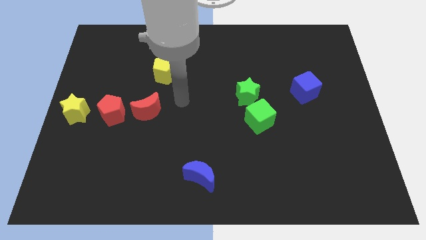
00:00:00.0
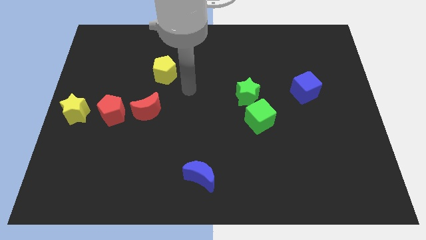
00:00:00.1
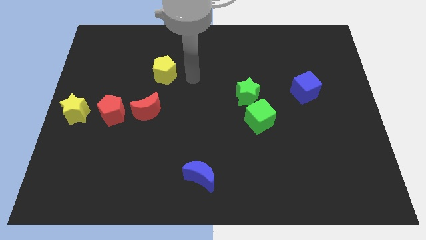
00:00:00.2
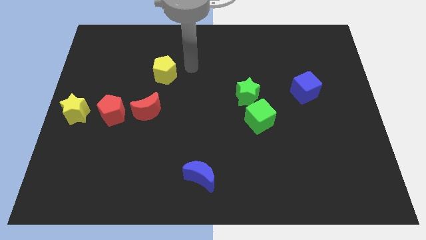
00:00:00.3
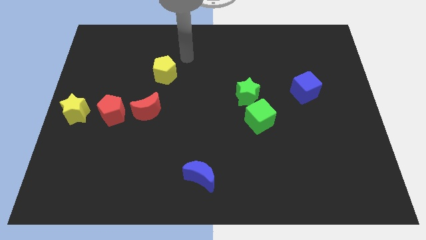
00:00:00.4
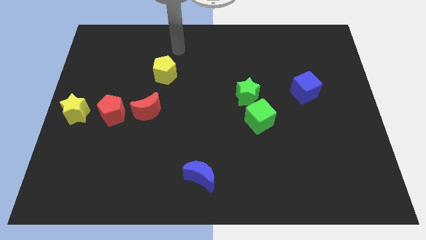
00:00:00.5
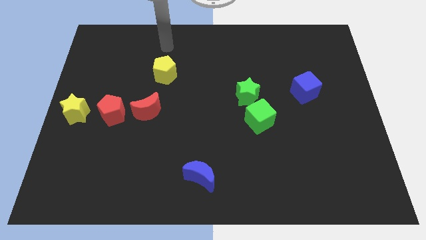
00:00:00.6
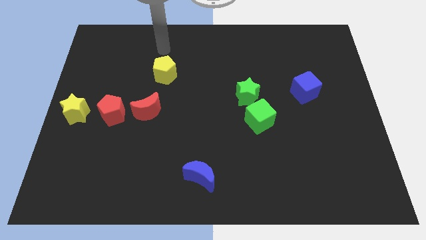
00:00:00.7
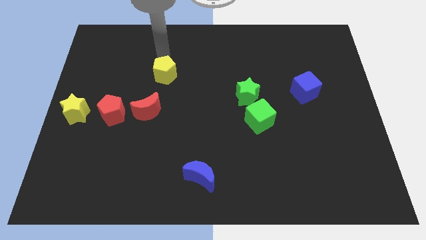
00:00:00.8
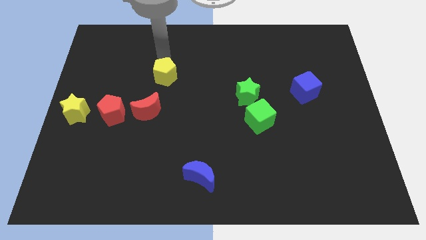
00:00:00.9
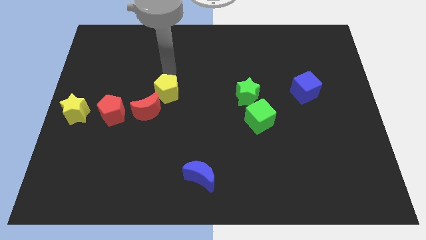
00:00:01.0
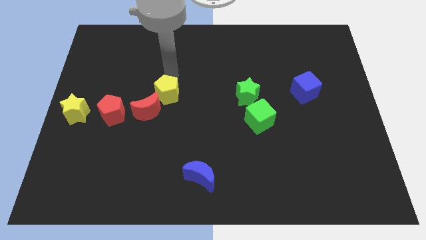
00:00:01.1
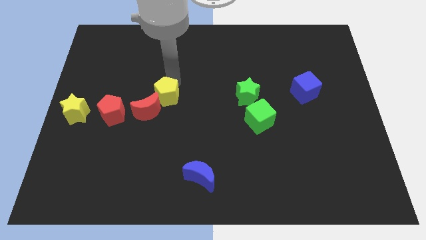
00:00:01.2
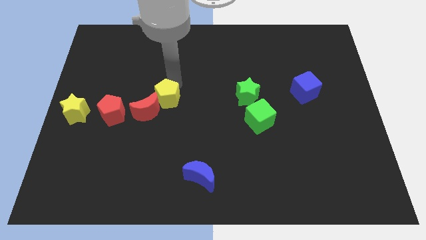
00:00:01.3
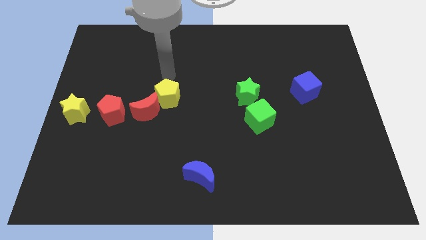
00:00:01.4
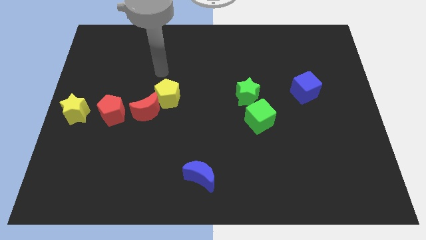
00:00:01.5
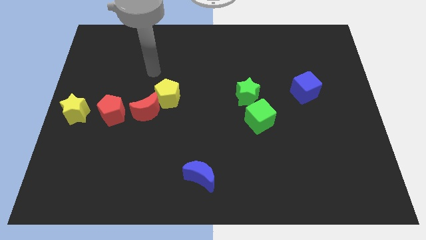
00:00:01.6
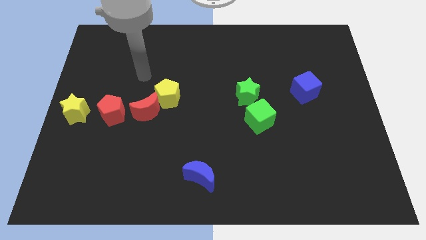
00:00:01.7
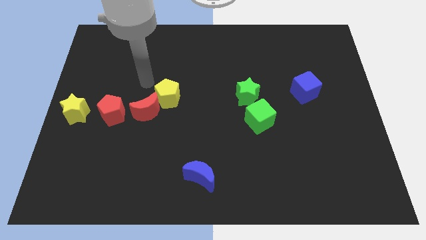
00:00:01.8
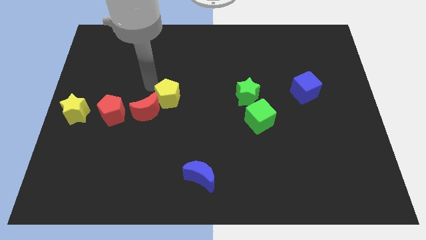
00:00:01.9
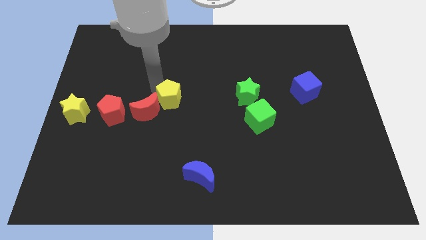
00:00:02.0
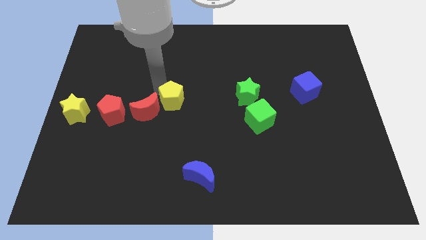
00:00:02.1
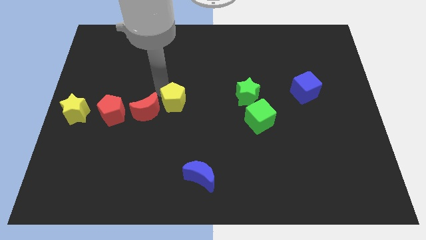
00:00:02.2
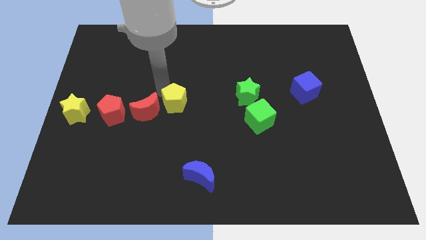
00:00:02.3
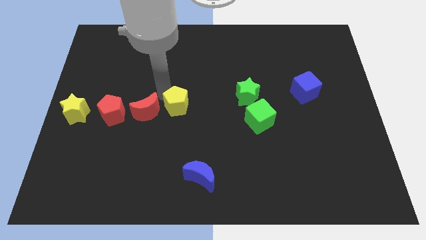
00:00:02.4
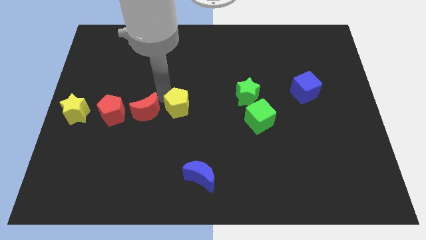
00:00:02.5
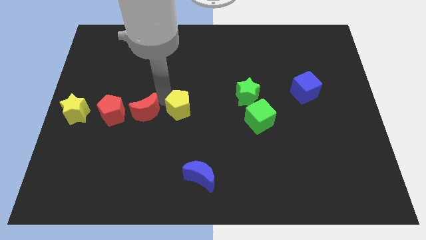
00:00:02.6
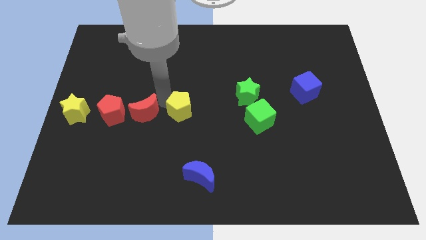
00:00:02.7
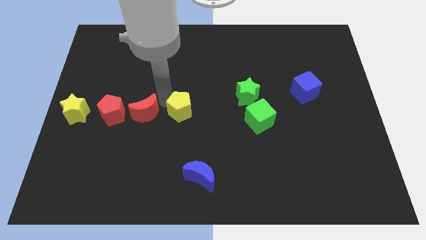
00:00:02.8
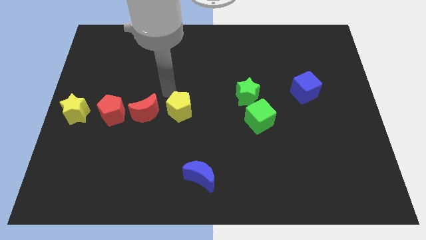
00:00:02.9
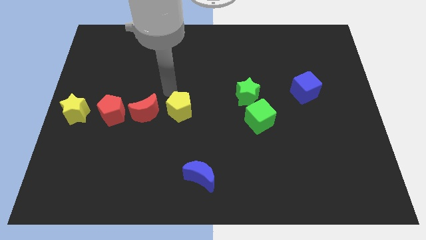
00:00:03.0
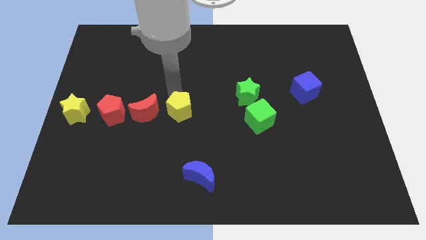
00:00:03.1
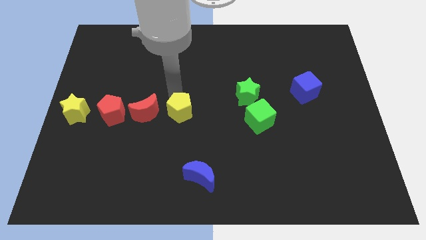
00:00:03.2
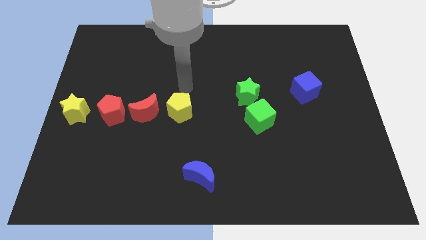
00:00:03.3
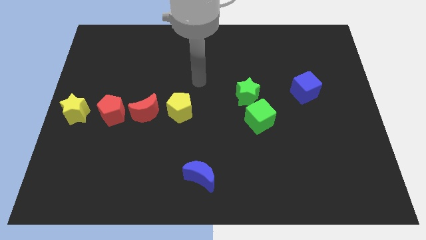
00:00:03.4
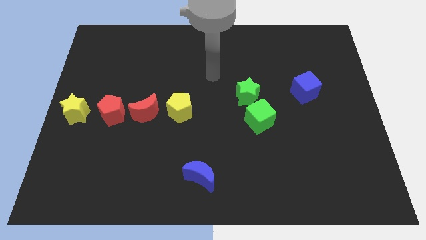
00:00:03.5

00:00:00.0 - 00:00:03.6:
place the yelllow pentagon at the right side of the red crescent

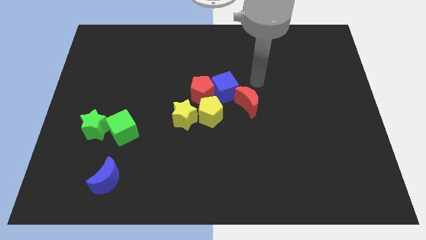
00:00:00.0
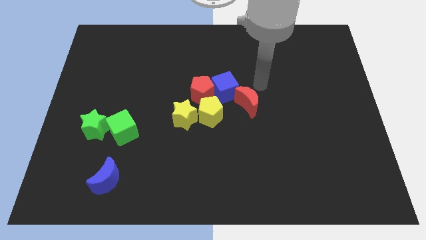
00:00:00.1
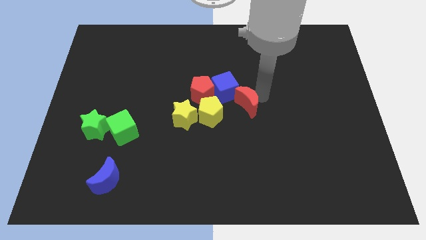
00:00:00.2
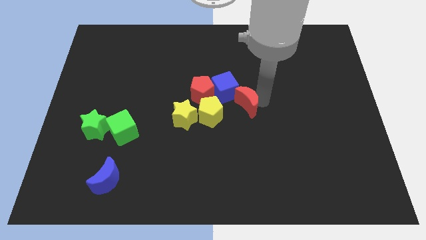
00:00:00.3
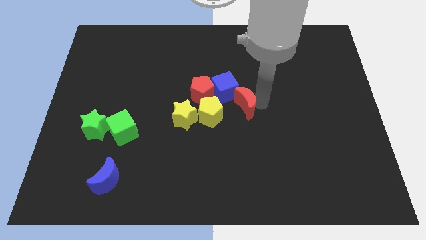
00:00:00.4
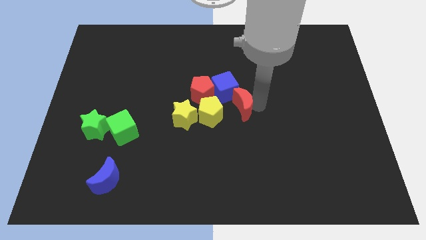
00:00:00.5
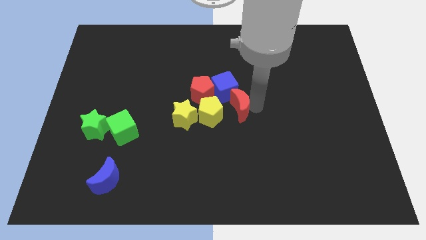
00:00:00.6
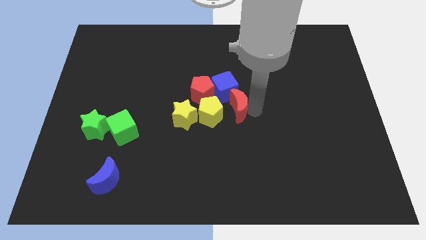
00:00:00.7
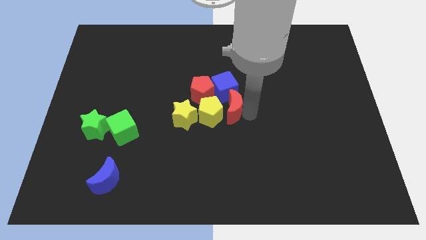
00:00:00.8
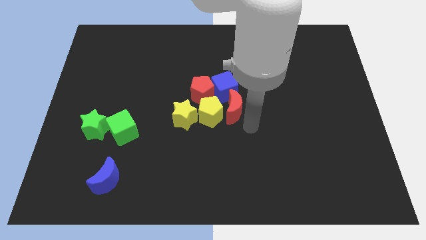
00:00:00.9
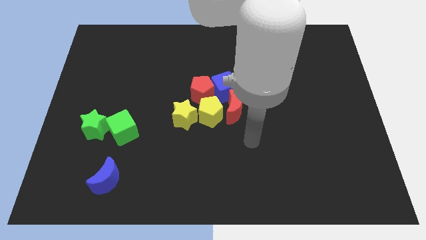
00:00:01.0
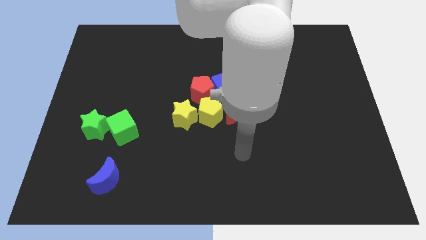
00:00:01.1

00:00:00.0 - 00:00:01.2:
place the red crescent below the blue cube

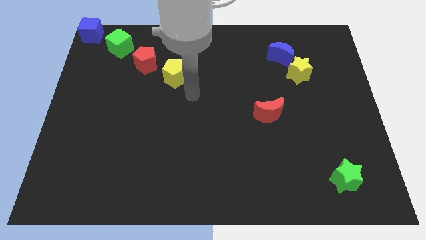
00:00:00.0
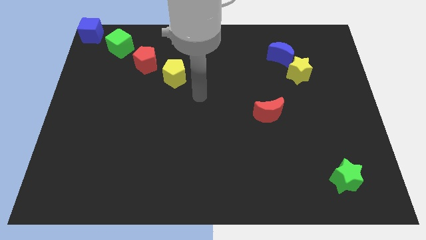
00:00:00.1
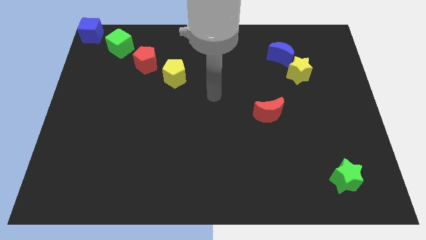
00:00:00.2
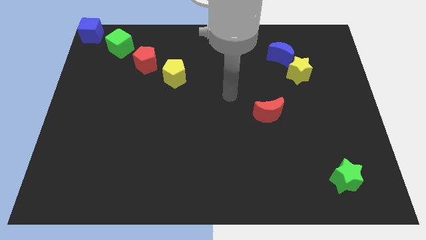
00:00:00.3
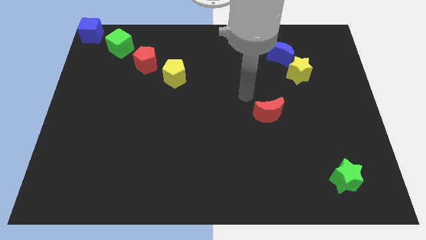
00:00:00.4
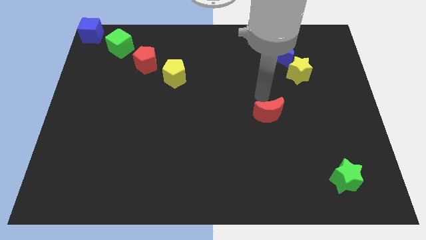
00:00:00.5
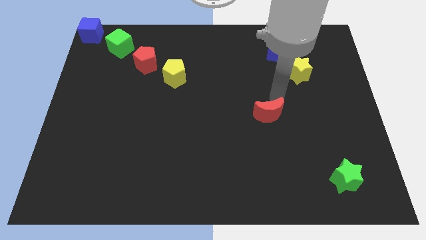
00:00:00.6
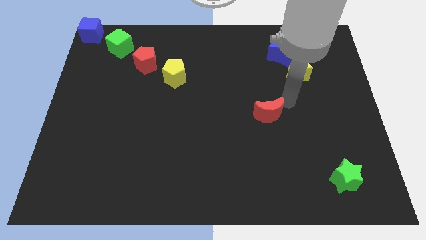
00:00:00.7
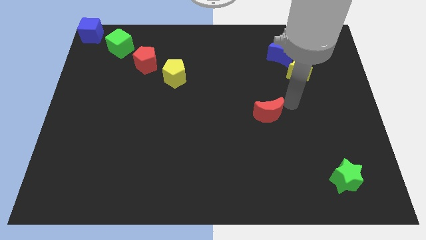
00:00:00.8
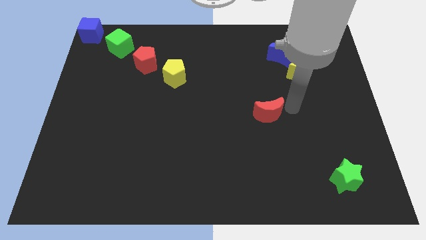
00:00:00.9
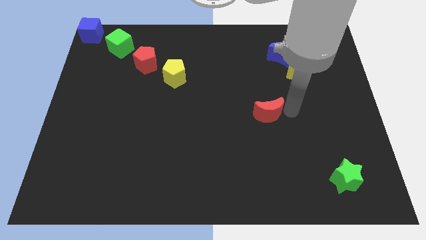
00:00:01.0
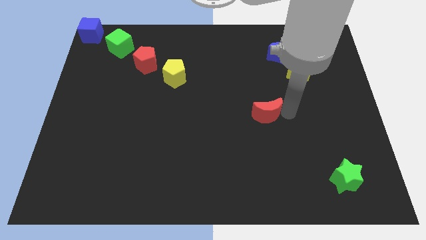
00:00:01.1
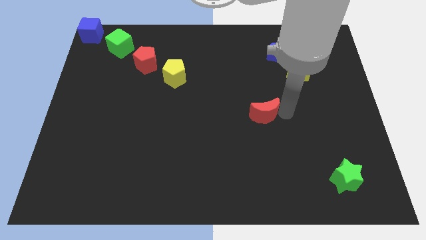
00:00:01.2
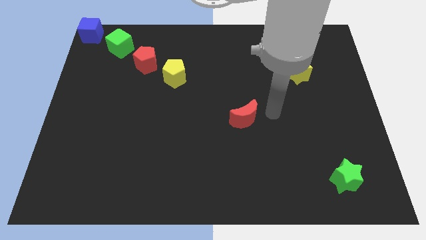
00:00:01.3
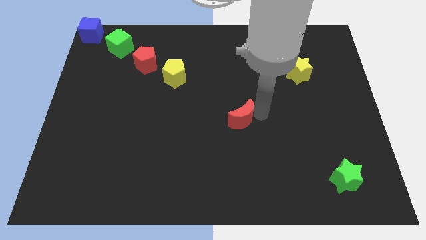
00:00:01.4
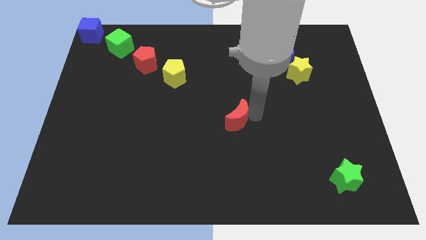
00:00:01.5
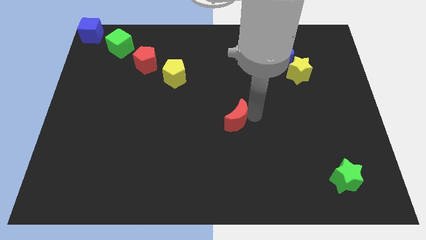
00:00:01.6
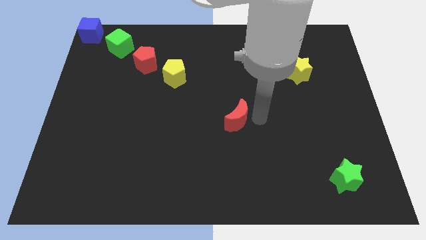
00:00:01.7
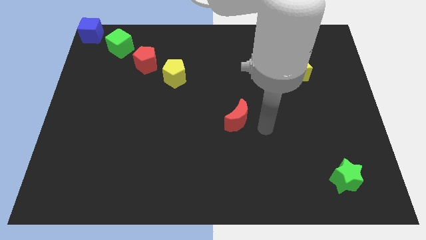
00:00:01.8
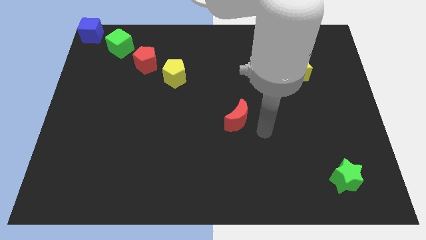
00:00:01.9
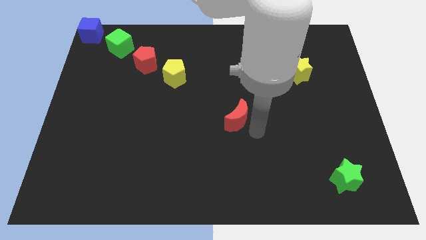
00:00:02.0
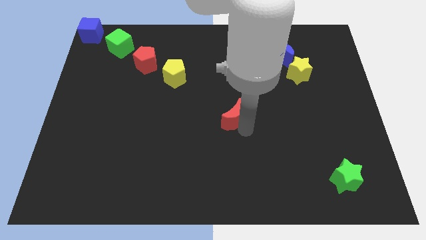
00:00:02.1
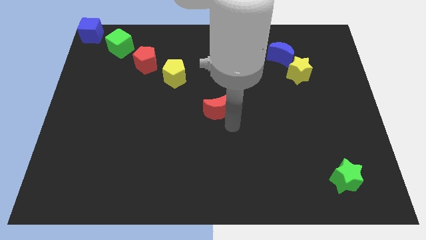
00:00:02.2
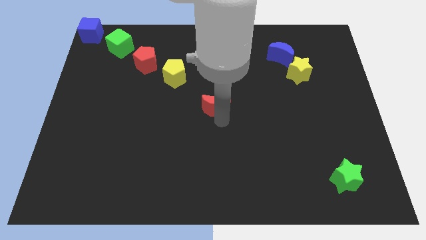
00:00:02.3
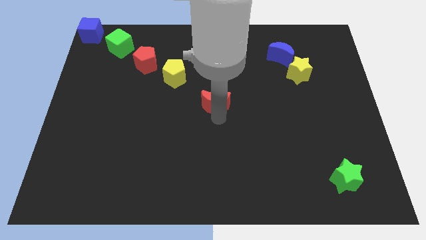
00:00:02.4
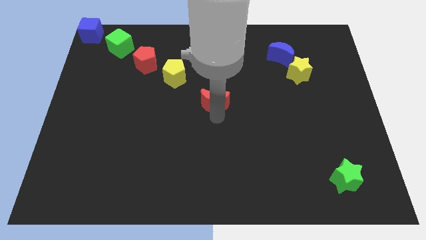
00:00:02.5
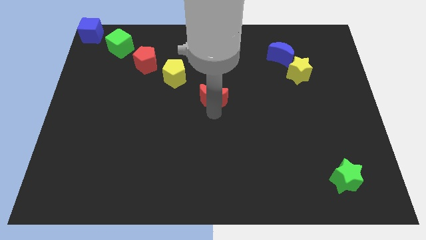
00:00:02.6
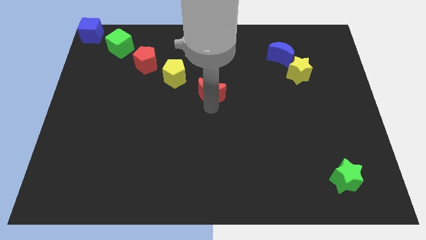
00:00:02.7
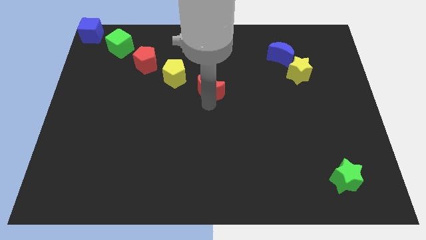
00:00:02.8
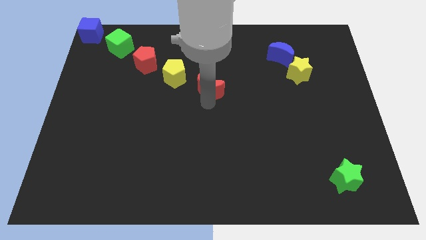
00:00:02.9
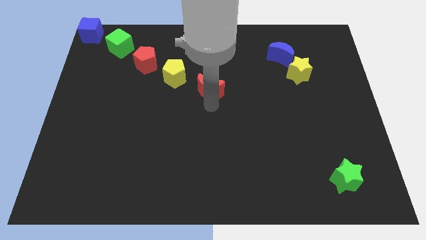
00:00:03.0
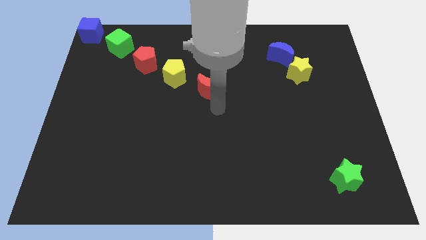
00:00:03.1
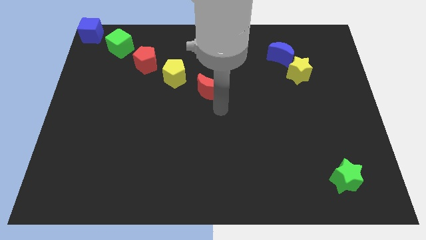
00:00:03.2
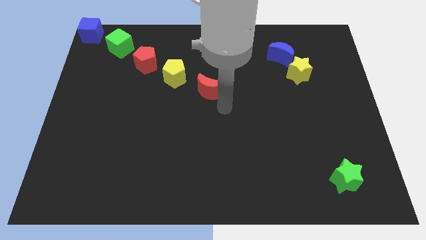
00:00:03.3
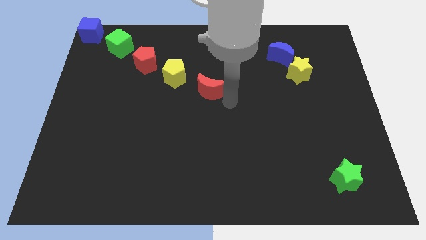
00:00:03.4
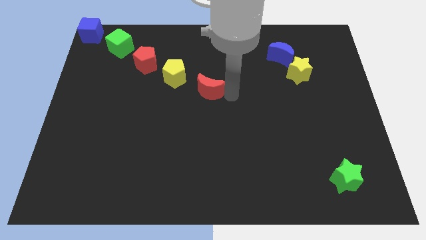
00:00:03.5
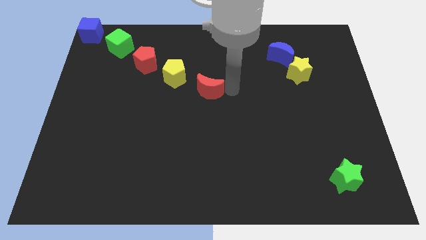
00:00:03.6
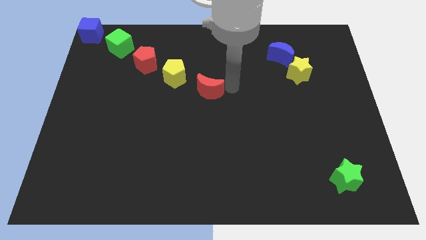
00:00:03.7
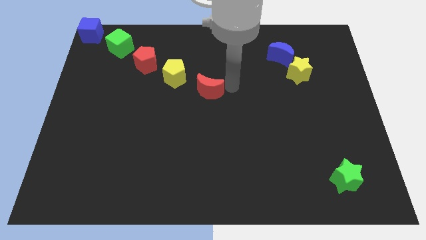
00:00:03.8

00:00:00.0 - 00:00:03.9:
move the red crescent to the center of the board

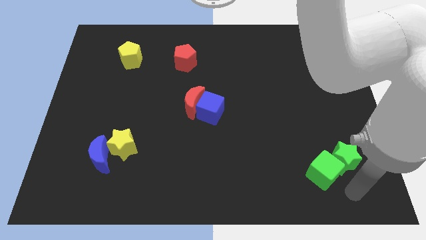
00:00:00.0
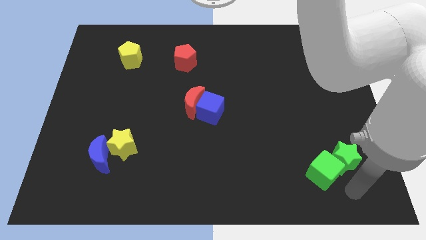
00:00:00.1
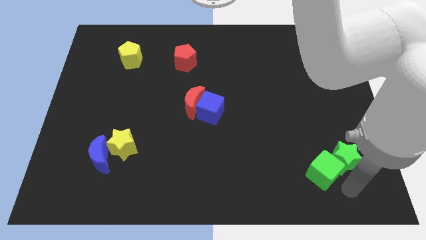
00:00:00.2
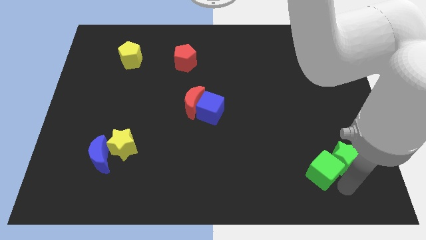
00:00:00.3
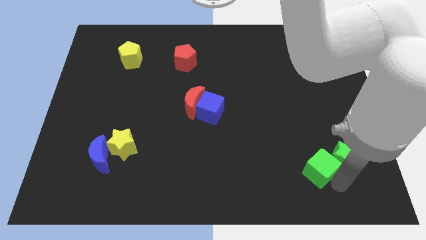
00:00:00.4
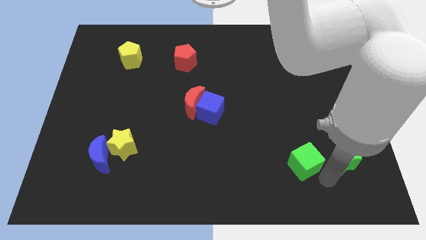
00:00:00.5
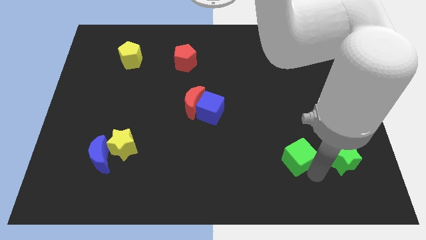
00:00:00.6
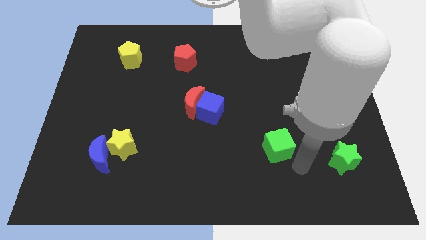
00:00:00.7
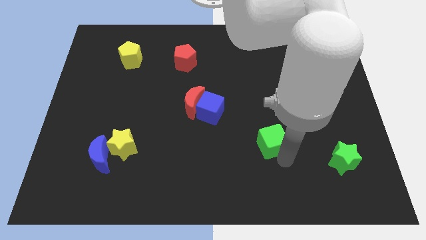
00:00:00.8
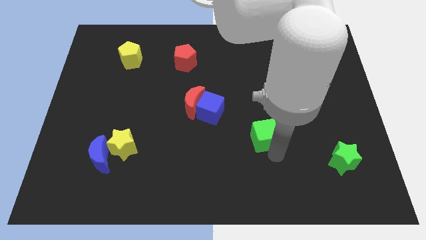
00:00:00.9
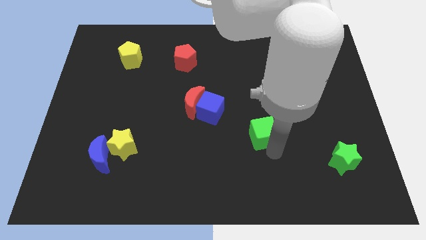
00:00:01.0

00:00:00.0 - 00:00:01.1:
place the green cube diagonally in between the green star and blue cube
